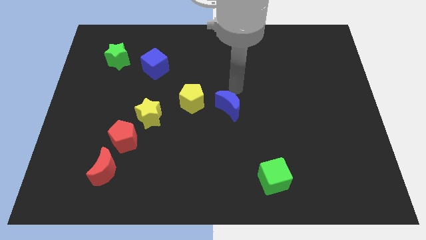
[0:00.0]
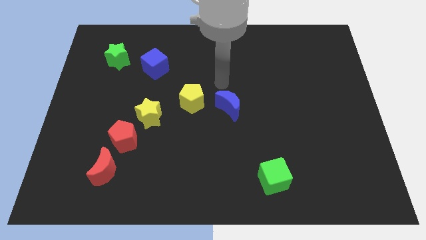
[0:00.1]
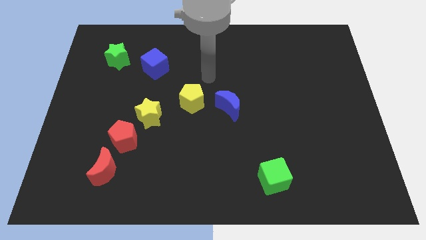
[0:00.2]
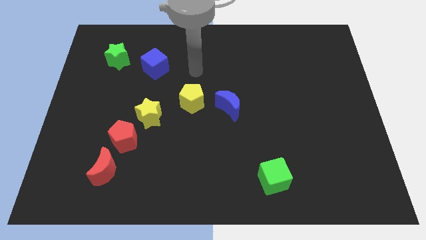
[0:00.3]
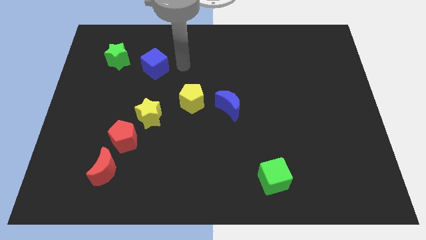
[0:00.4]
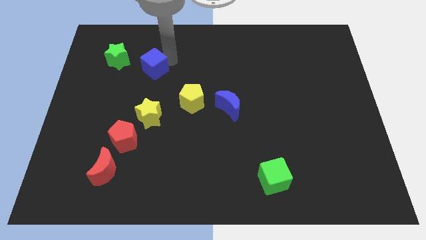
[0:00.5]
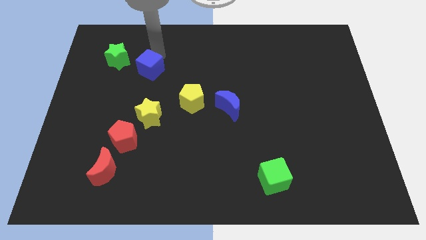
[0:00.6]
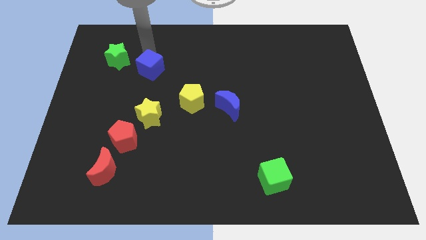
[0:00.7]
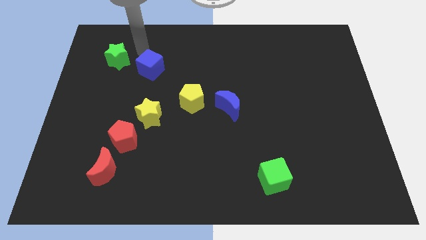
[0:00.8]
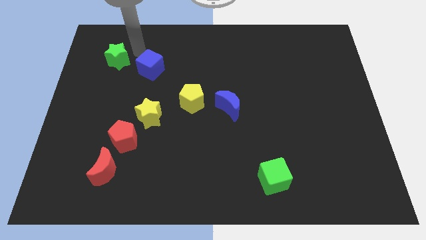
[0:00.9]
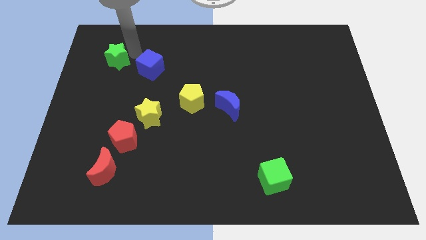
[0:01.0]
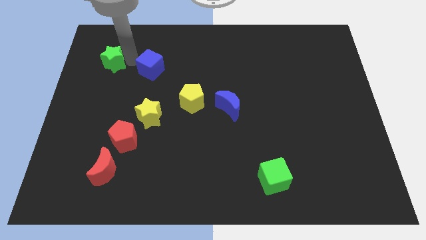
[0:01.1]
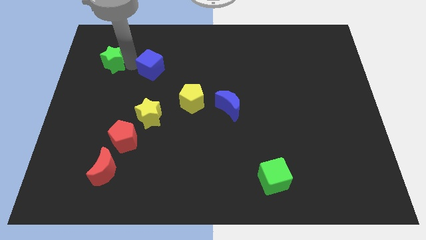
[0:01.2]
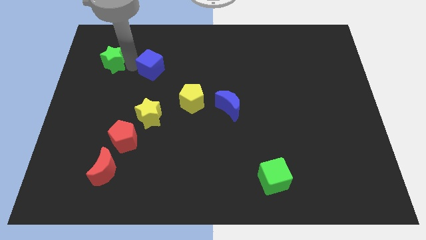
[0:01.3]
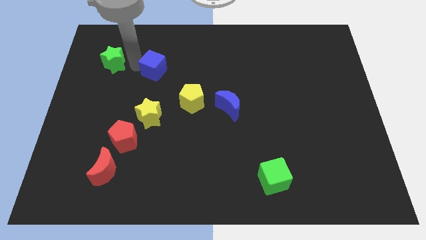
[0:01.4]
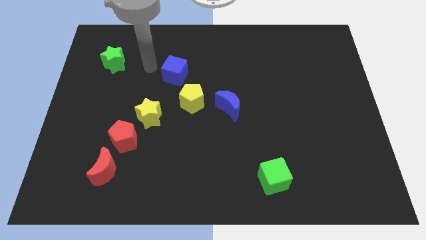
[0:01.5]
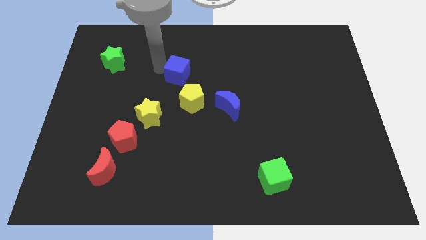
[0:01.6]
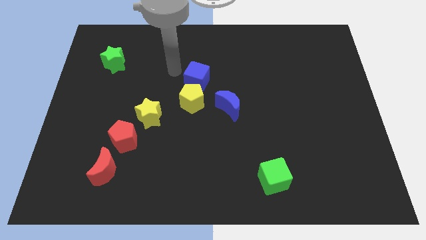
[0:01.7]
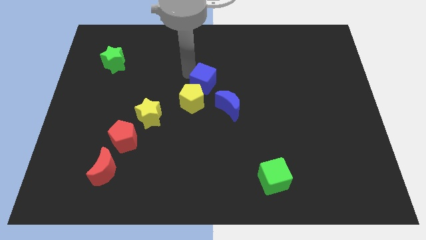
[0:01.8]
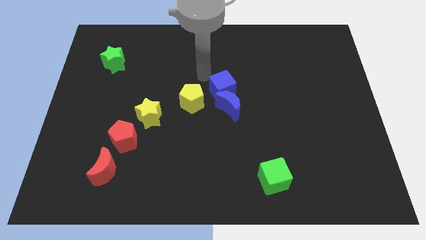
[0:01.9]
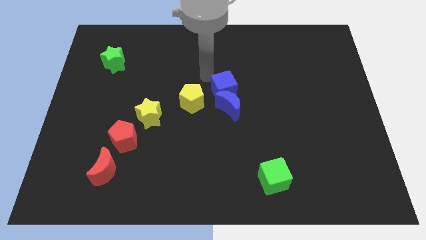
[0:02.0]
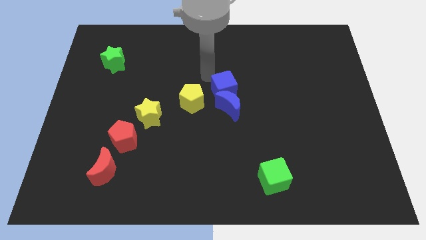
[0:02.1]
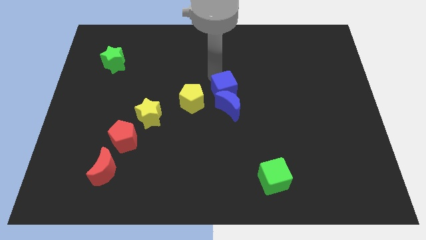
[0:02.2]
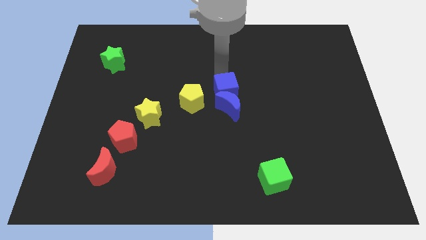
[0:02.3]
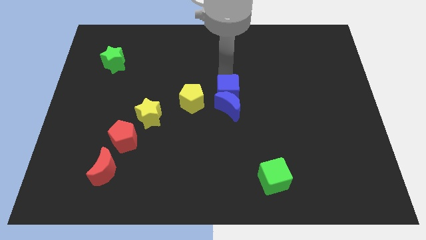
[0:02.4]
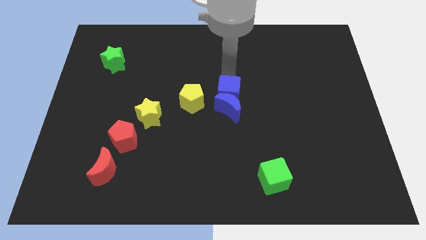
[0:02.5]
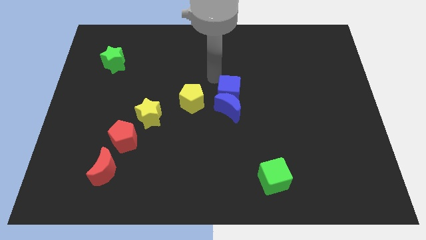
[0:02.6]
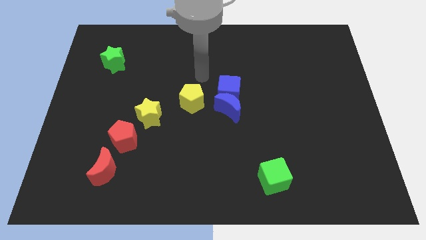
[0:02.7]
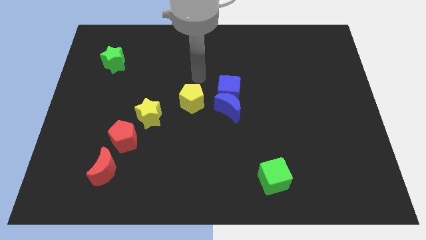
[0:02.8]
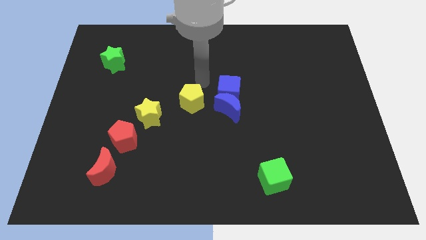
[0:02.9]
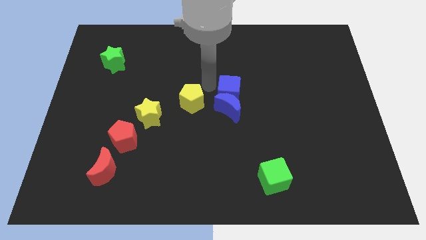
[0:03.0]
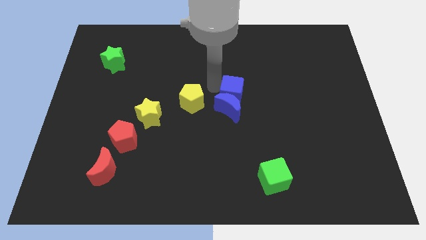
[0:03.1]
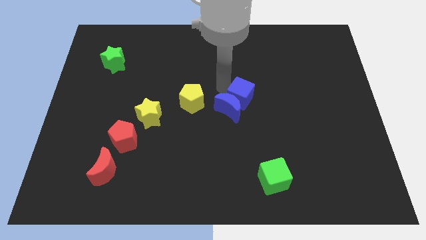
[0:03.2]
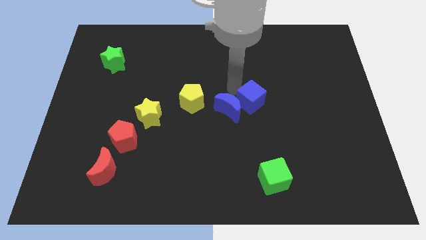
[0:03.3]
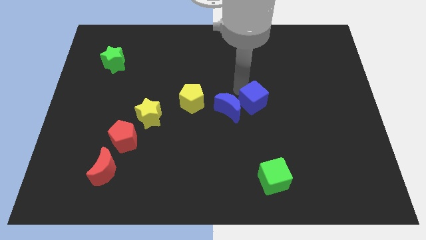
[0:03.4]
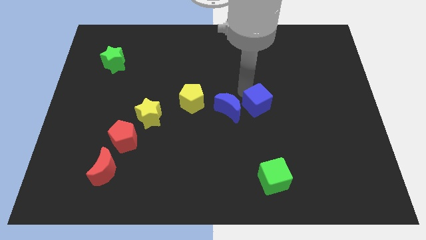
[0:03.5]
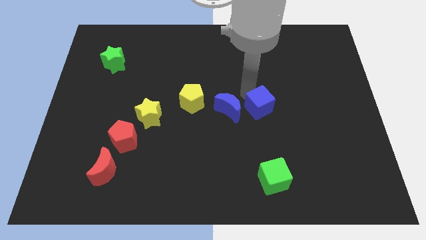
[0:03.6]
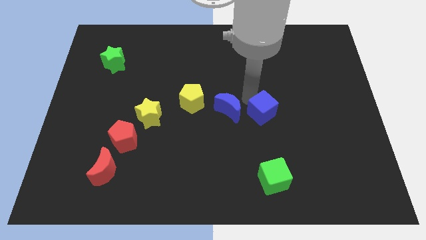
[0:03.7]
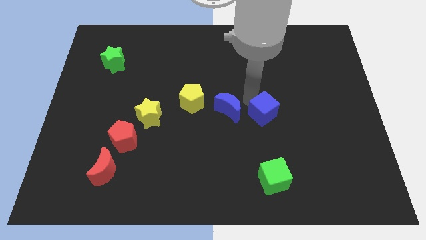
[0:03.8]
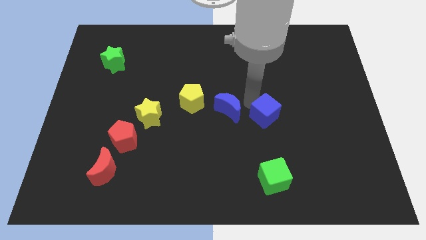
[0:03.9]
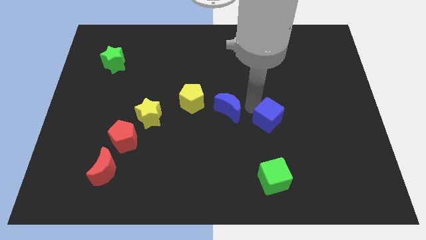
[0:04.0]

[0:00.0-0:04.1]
move the blue cube to the top of the green cube

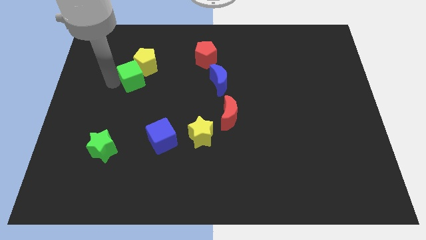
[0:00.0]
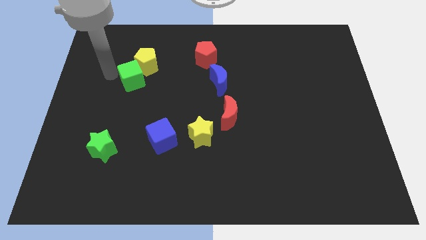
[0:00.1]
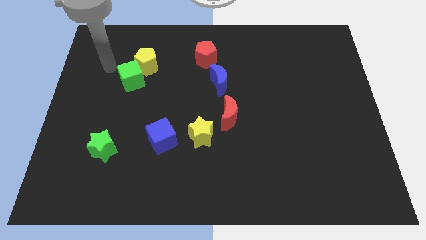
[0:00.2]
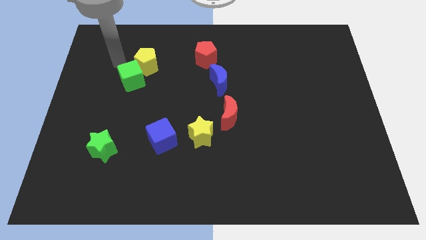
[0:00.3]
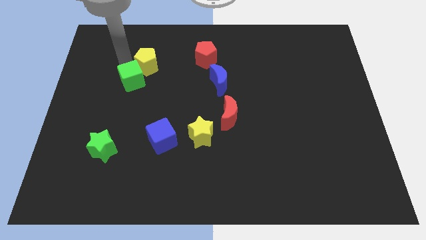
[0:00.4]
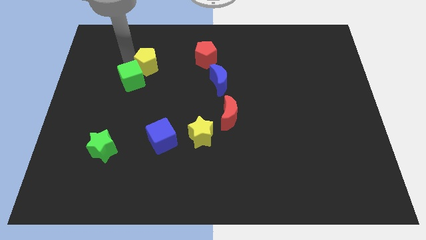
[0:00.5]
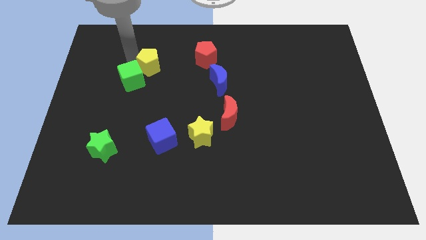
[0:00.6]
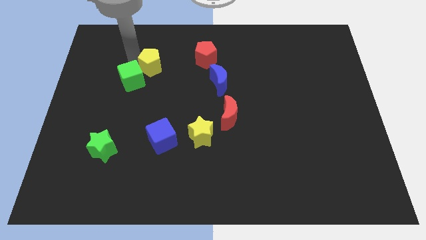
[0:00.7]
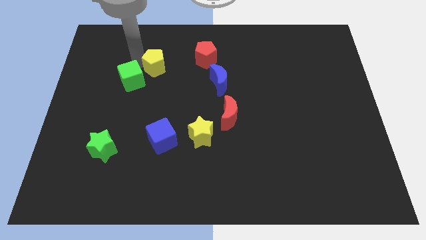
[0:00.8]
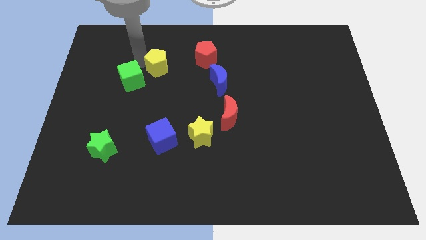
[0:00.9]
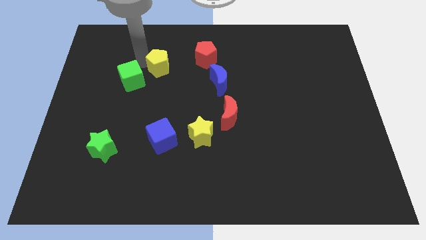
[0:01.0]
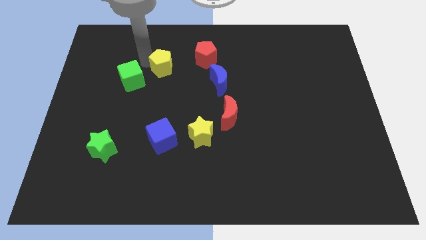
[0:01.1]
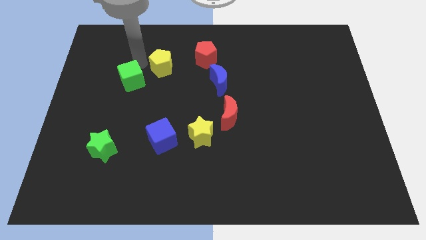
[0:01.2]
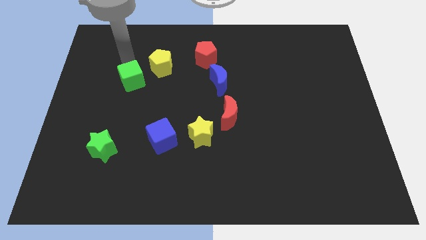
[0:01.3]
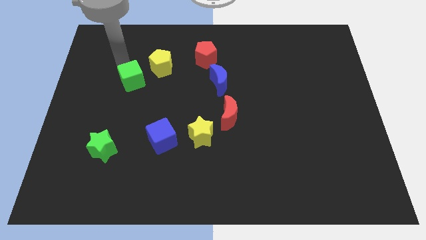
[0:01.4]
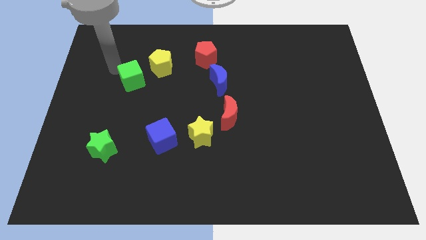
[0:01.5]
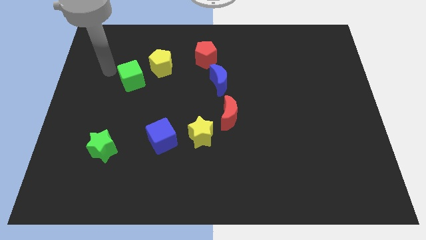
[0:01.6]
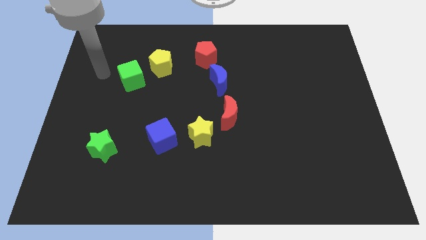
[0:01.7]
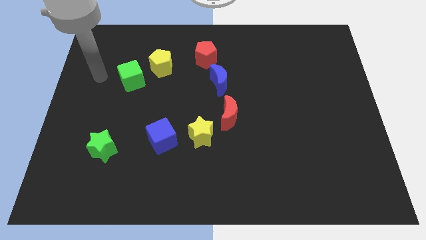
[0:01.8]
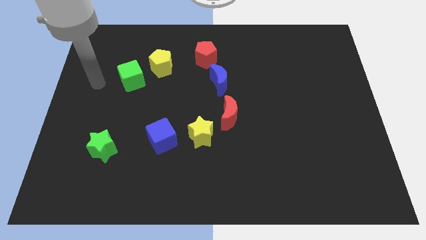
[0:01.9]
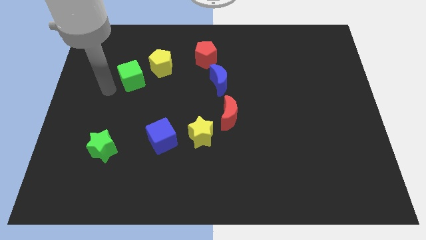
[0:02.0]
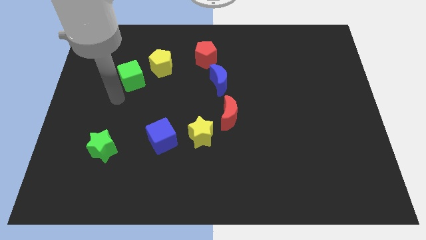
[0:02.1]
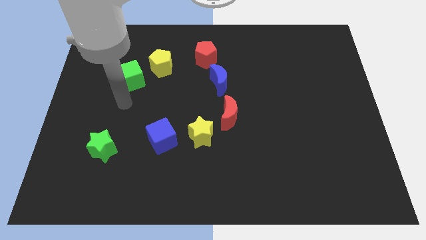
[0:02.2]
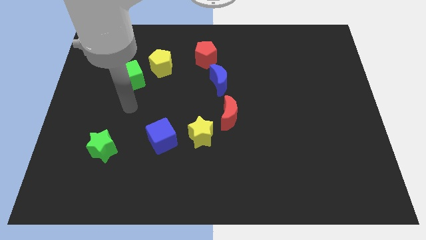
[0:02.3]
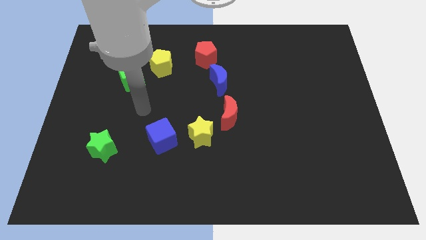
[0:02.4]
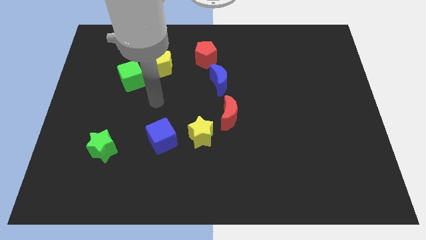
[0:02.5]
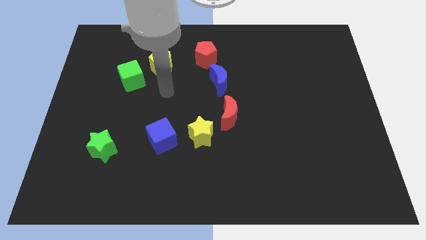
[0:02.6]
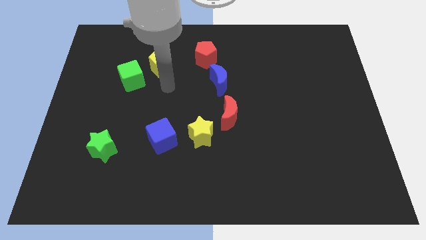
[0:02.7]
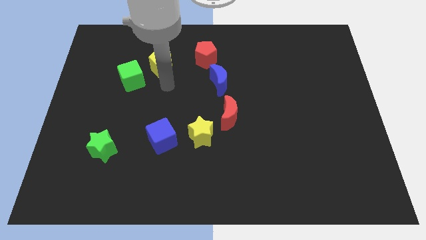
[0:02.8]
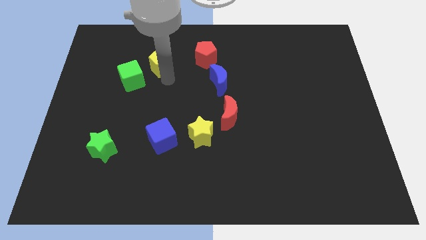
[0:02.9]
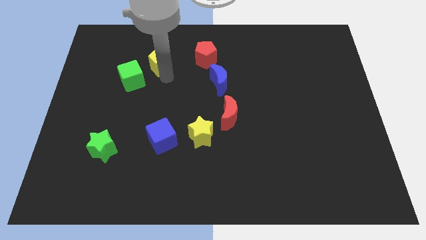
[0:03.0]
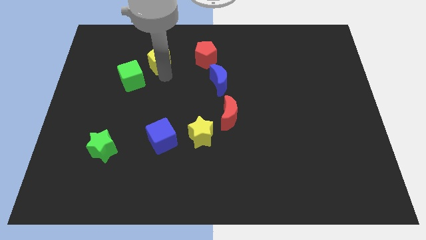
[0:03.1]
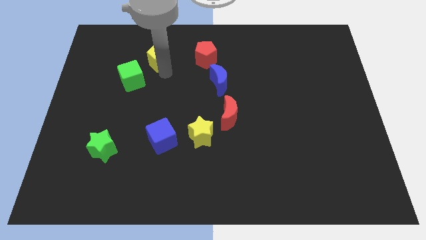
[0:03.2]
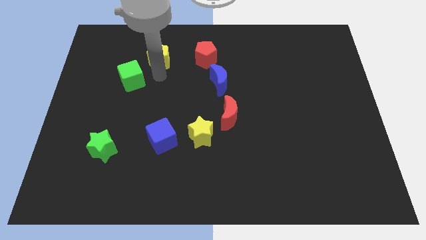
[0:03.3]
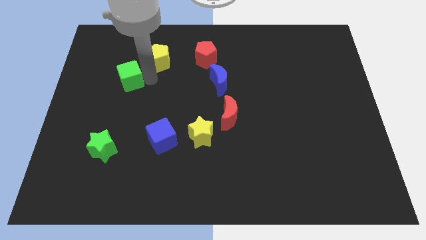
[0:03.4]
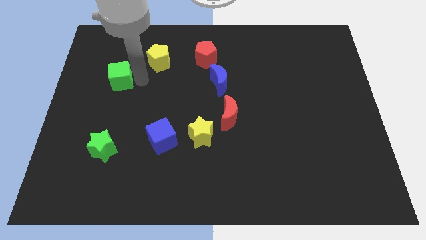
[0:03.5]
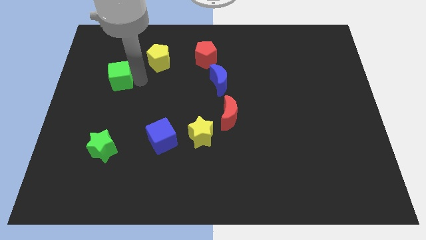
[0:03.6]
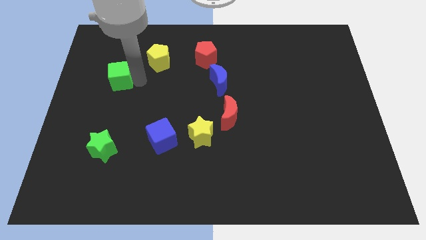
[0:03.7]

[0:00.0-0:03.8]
move yellow pentagon slightly up

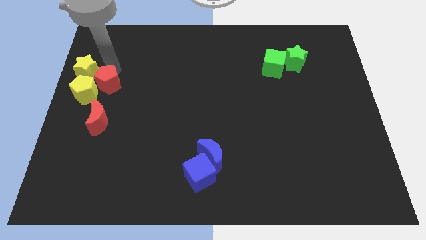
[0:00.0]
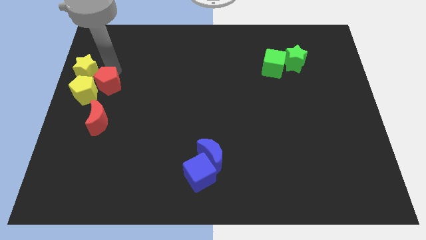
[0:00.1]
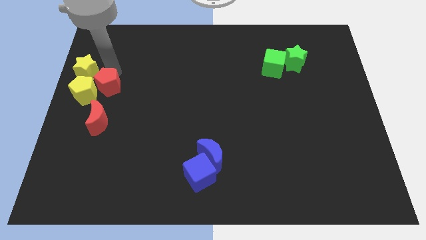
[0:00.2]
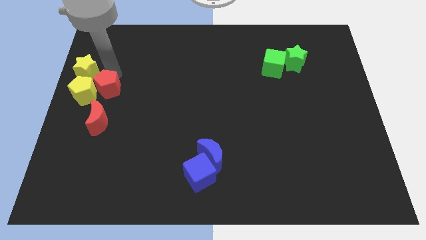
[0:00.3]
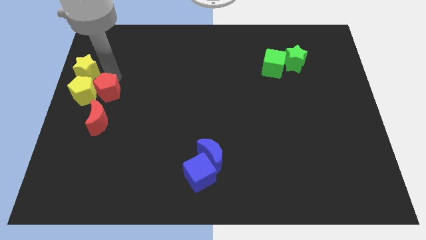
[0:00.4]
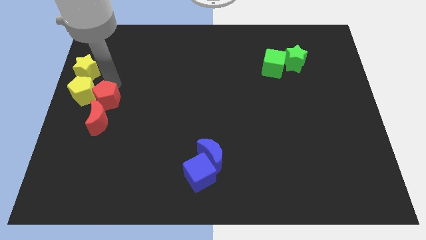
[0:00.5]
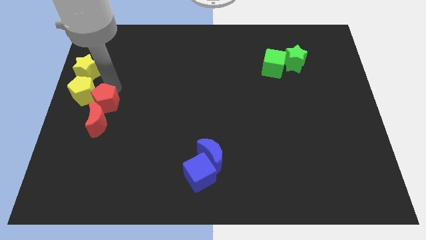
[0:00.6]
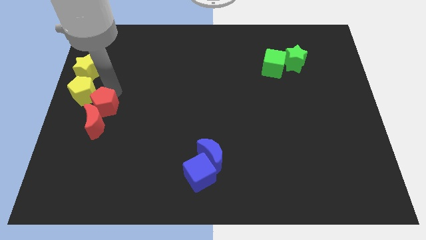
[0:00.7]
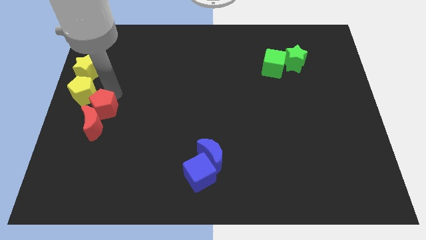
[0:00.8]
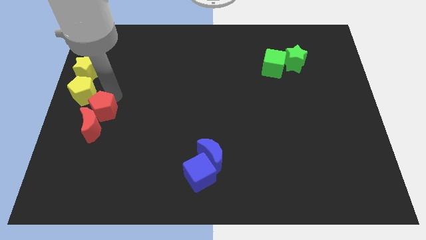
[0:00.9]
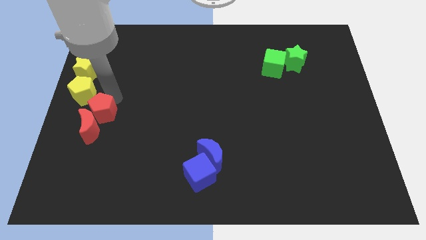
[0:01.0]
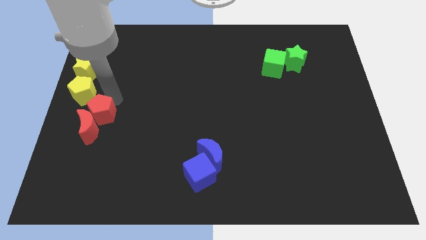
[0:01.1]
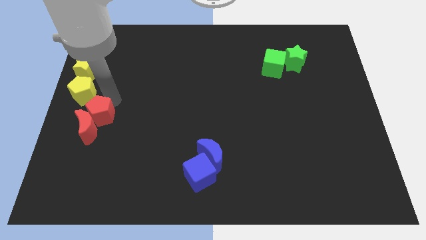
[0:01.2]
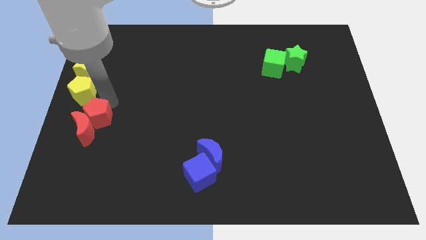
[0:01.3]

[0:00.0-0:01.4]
push the red pentagon into the red moon
